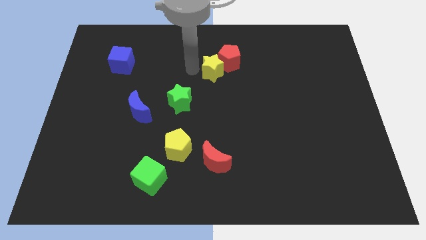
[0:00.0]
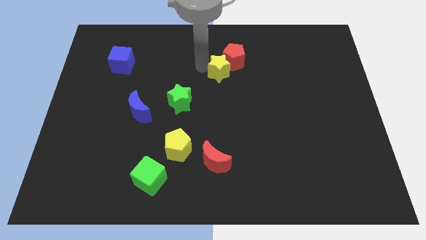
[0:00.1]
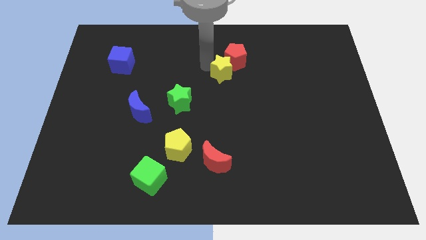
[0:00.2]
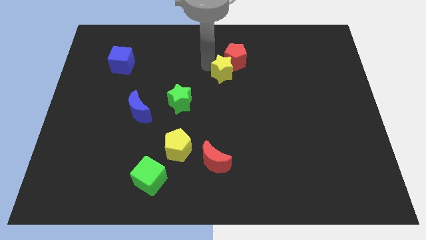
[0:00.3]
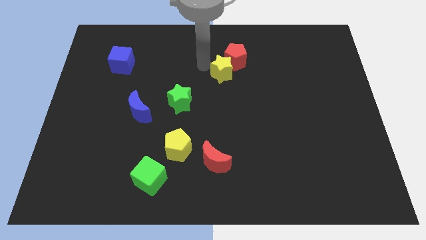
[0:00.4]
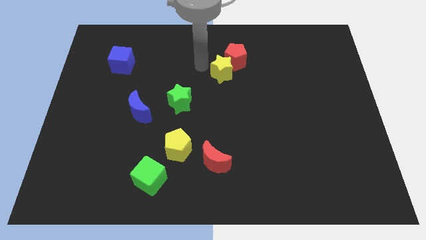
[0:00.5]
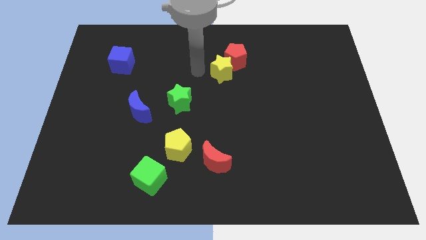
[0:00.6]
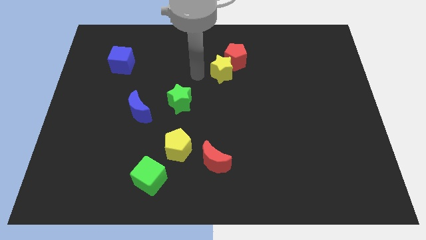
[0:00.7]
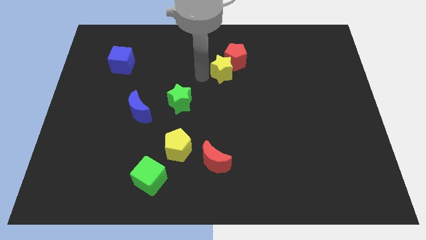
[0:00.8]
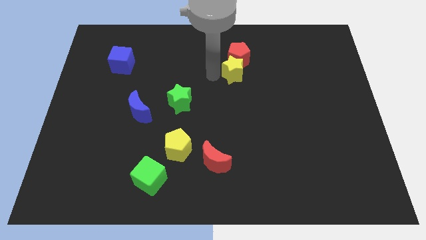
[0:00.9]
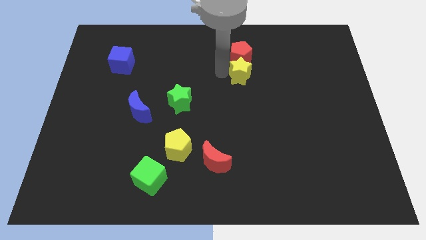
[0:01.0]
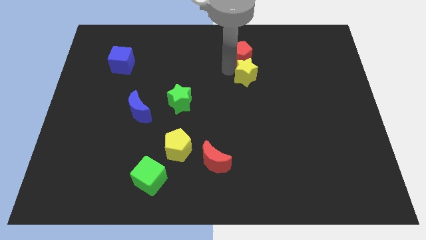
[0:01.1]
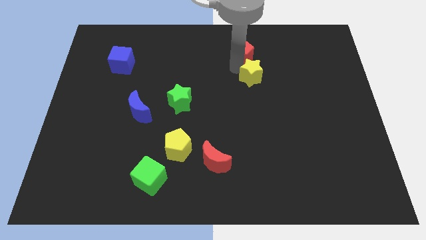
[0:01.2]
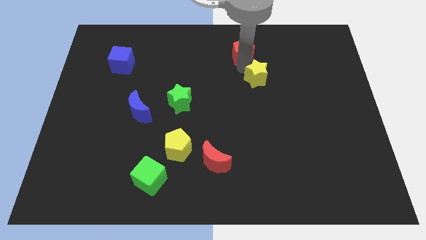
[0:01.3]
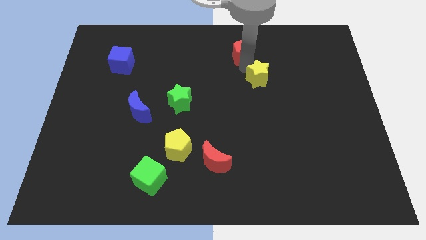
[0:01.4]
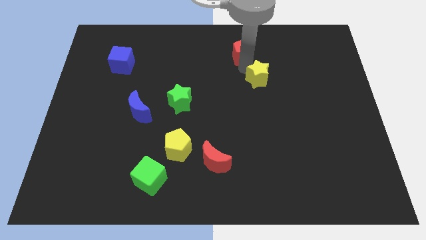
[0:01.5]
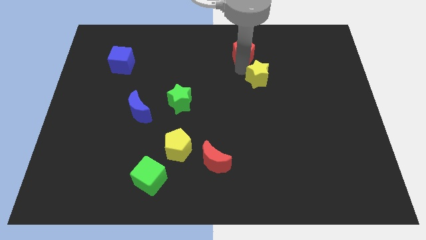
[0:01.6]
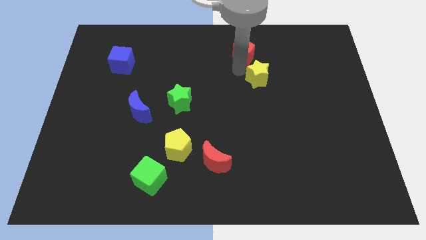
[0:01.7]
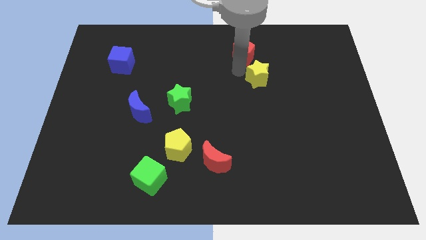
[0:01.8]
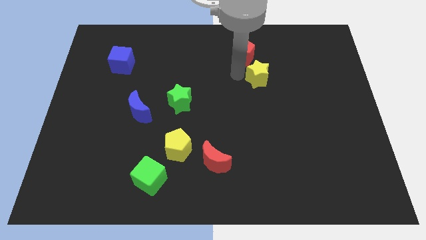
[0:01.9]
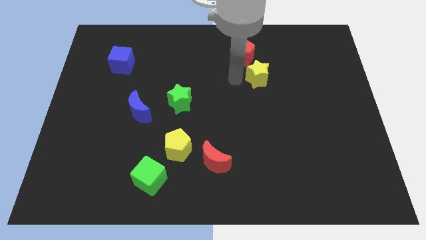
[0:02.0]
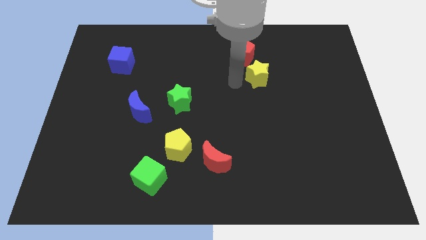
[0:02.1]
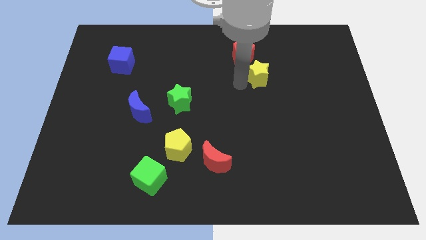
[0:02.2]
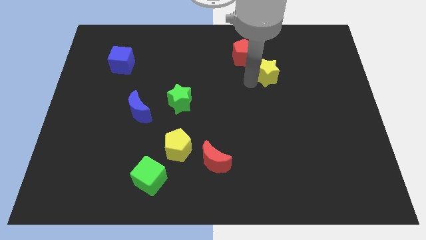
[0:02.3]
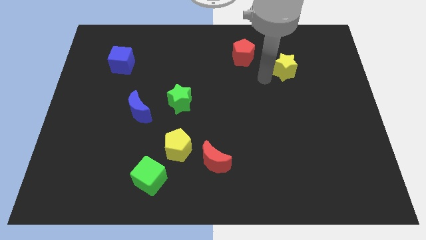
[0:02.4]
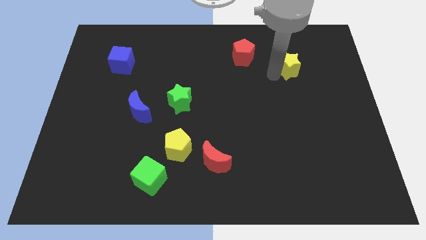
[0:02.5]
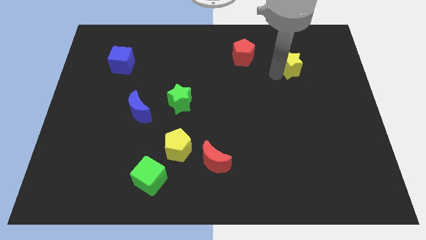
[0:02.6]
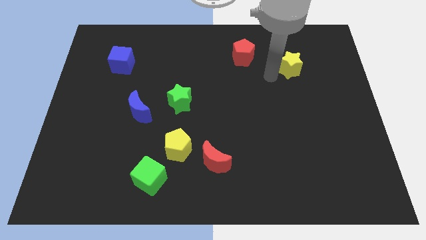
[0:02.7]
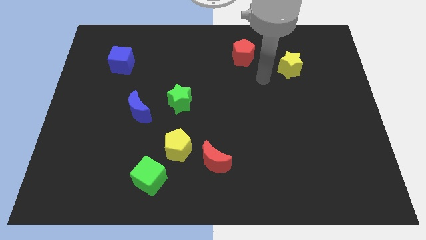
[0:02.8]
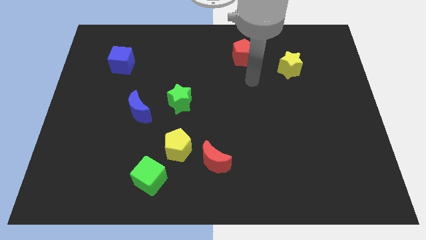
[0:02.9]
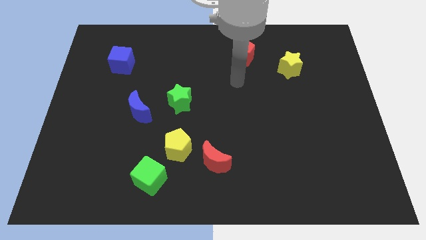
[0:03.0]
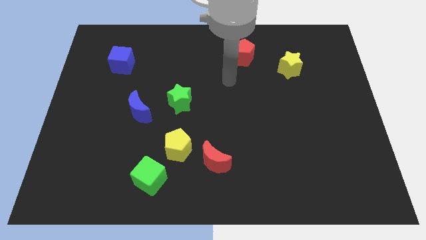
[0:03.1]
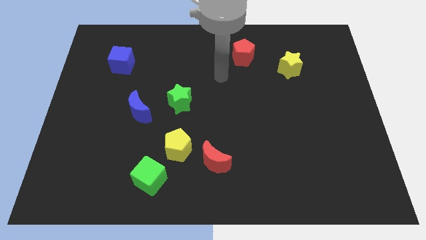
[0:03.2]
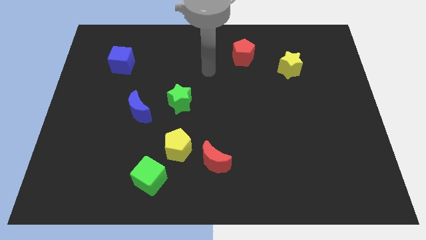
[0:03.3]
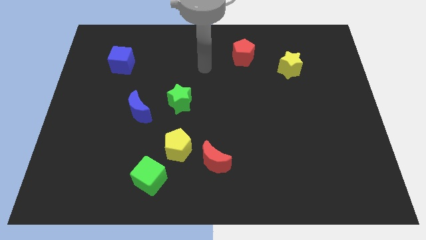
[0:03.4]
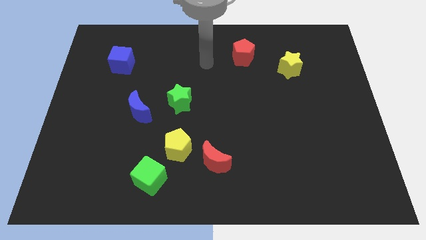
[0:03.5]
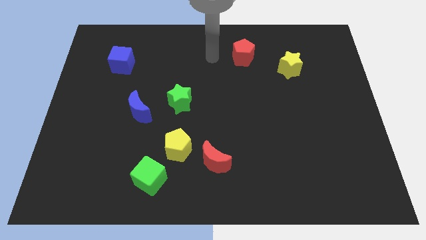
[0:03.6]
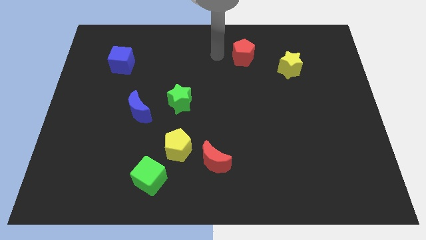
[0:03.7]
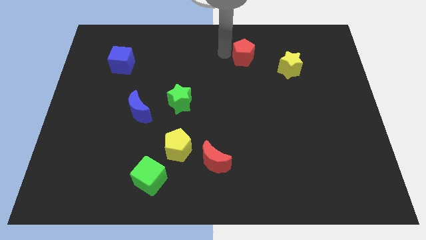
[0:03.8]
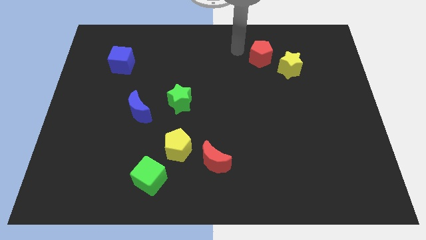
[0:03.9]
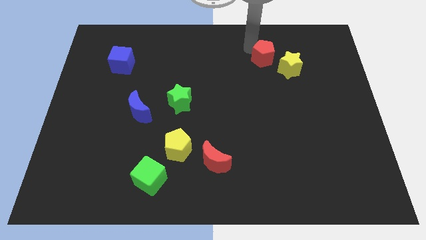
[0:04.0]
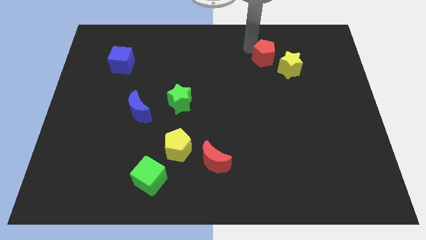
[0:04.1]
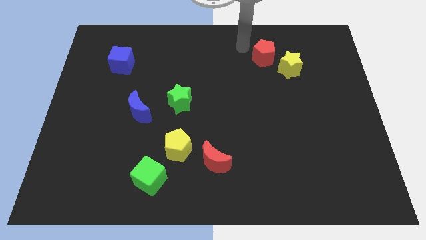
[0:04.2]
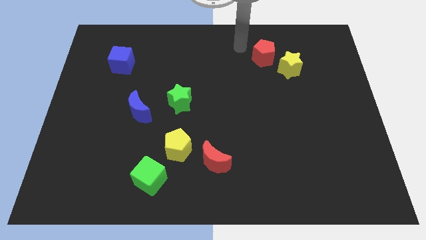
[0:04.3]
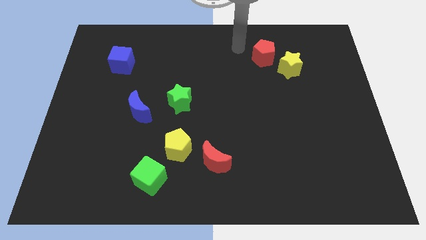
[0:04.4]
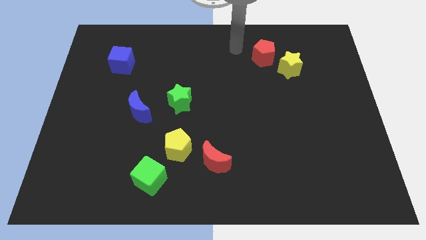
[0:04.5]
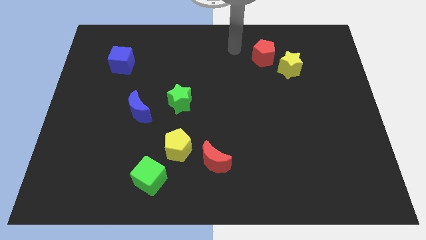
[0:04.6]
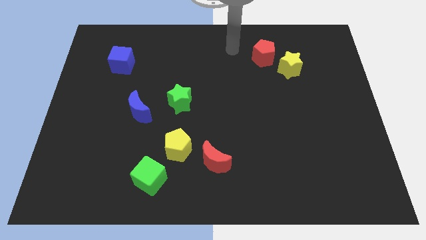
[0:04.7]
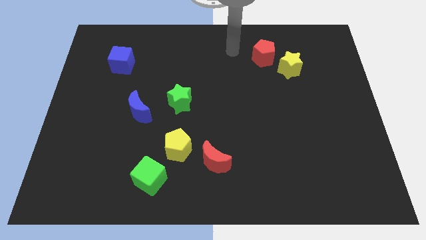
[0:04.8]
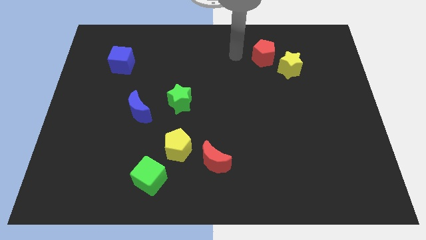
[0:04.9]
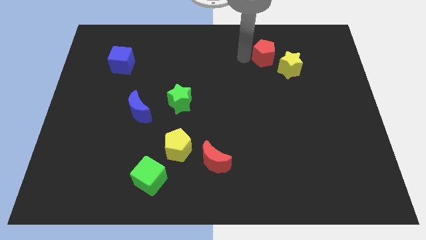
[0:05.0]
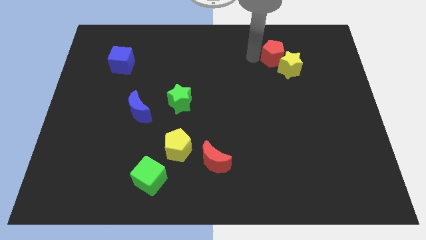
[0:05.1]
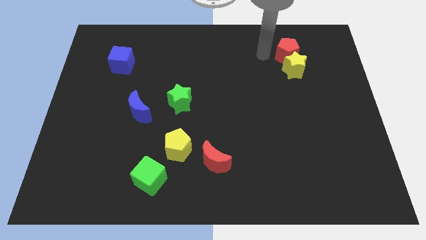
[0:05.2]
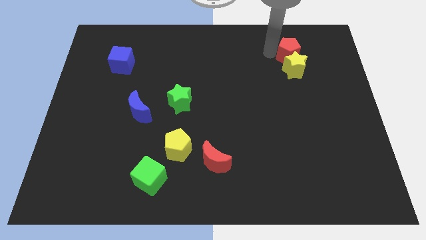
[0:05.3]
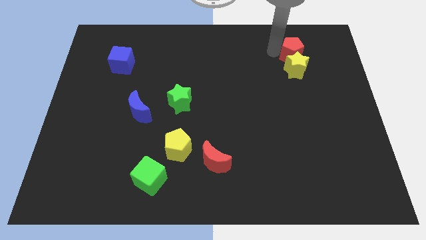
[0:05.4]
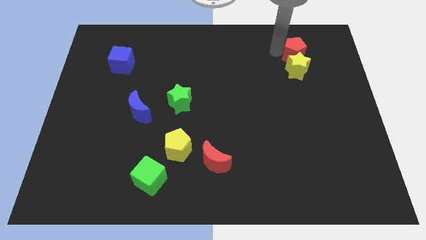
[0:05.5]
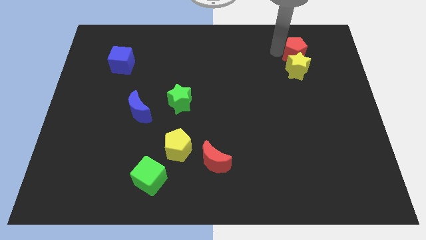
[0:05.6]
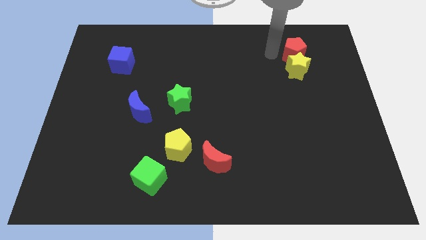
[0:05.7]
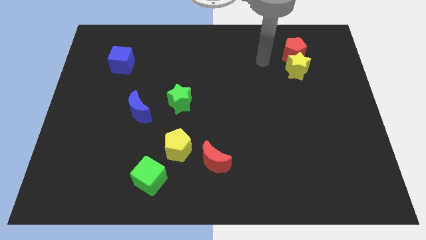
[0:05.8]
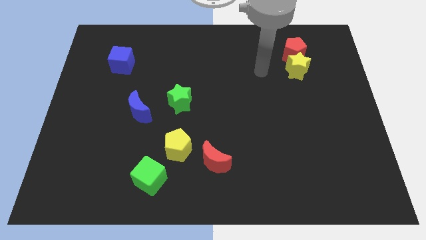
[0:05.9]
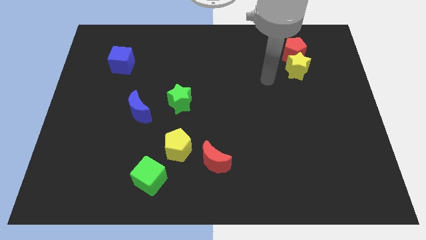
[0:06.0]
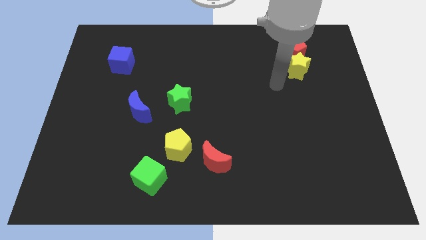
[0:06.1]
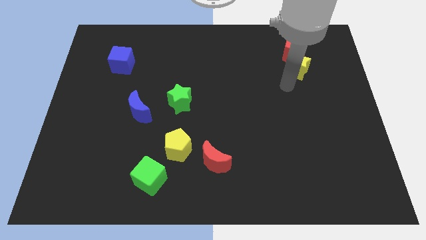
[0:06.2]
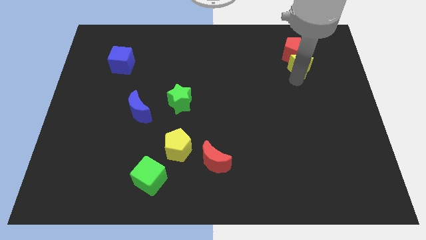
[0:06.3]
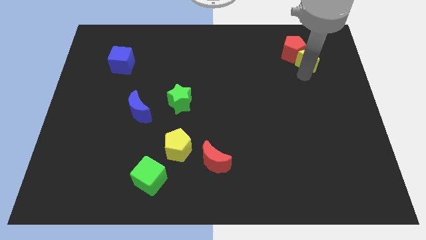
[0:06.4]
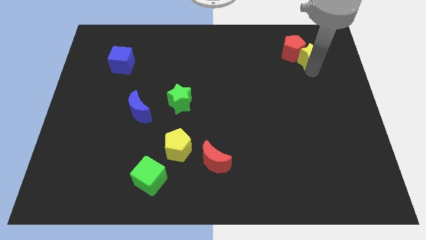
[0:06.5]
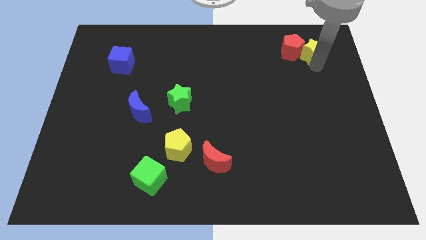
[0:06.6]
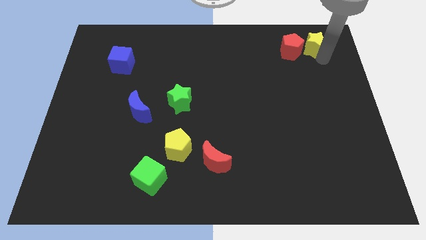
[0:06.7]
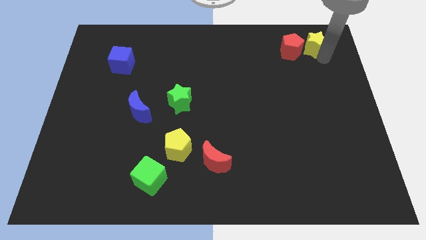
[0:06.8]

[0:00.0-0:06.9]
push the yellow star and red pentagon towards the top right of the board

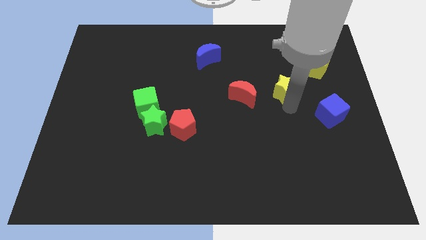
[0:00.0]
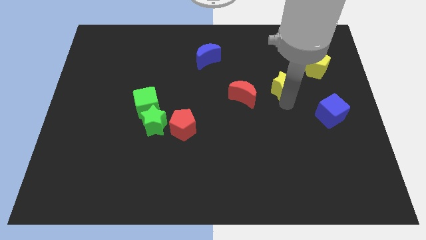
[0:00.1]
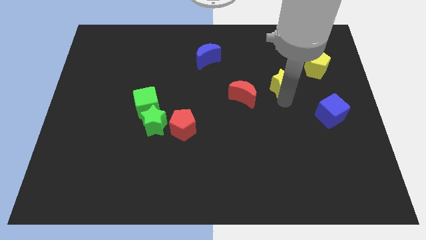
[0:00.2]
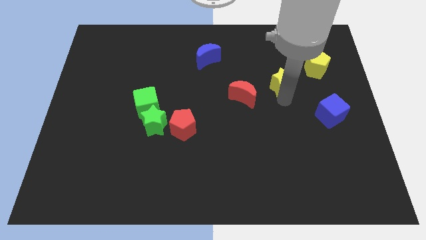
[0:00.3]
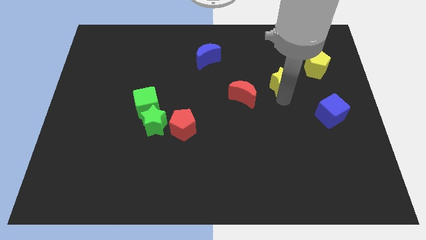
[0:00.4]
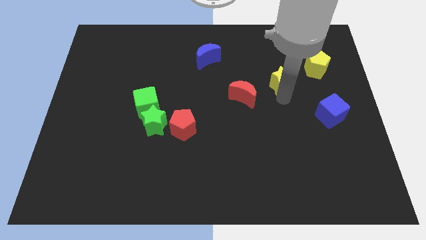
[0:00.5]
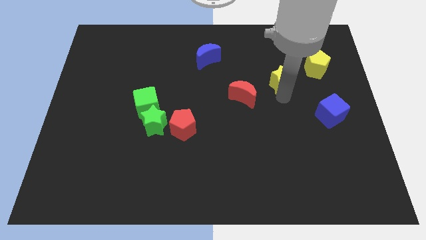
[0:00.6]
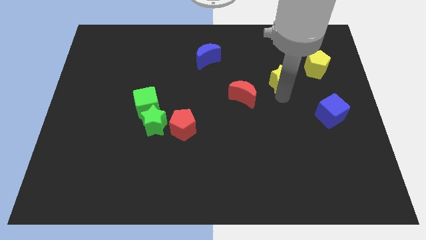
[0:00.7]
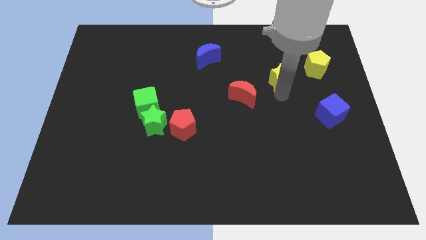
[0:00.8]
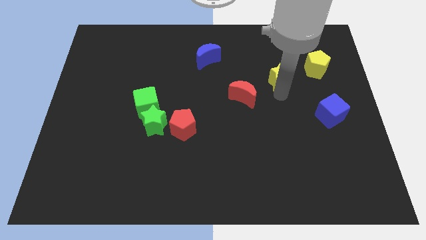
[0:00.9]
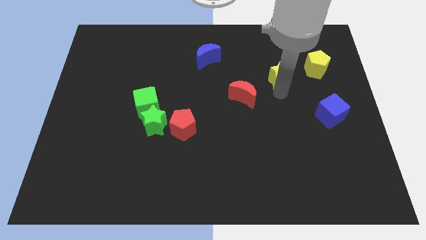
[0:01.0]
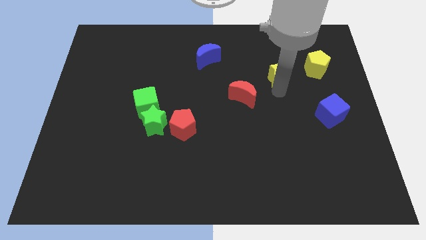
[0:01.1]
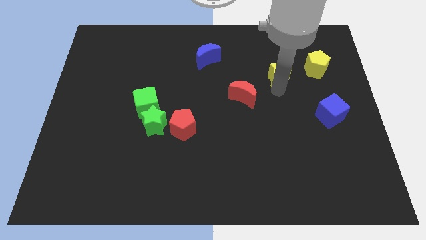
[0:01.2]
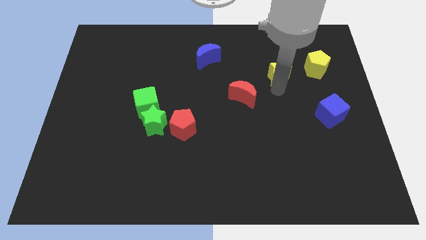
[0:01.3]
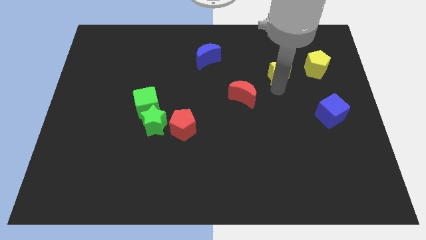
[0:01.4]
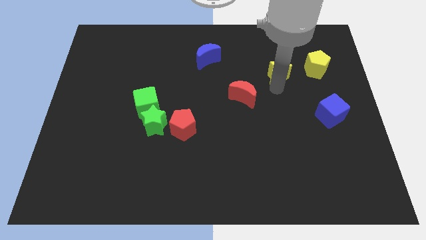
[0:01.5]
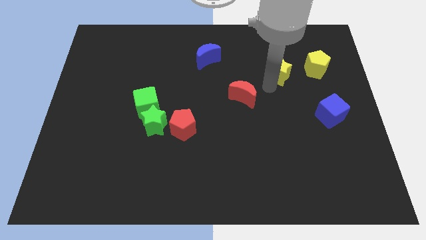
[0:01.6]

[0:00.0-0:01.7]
push the yellow star slightly to the top

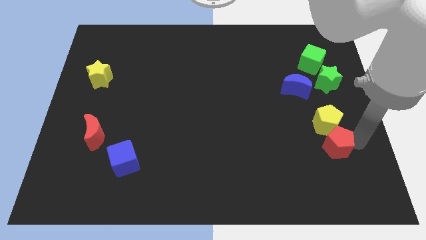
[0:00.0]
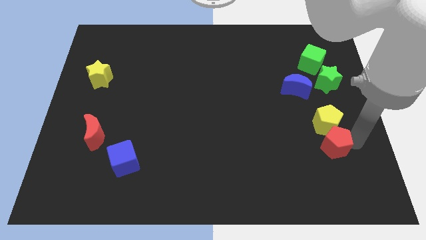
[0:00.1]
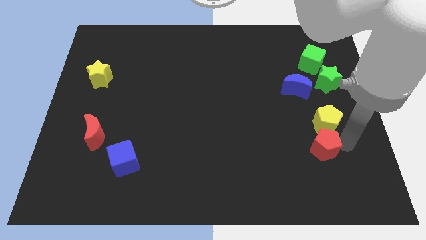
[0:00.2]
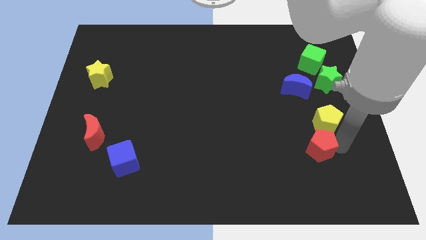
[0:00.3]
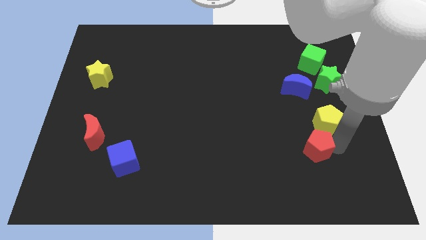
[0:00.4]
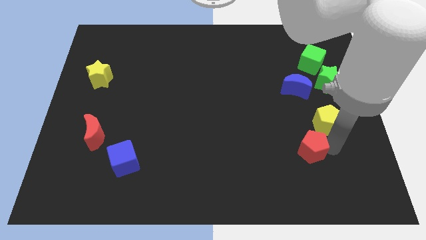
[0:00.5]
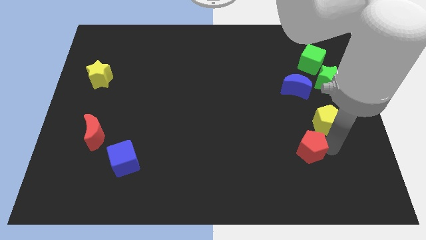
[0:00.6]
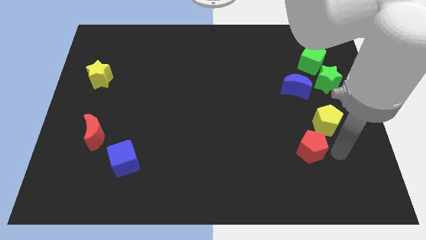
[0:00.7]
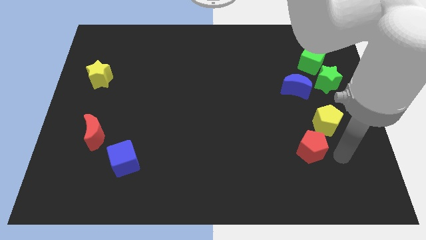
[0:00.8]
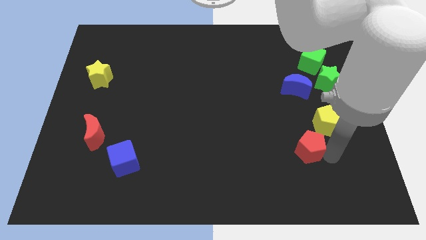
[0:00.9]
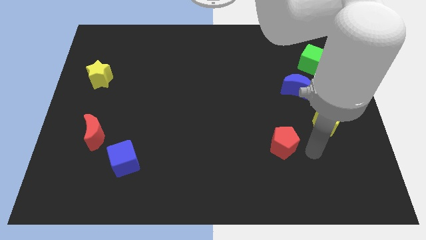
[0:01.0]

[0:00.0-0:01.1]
separate red pentagon diagonal below the blue moon
